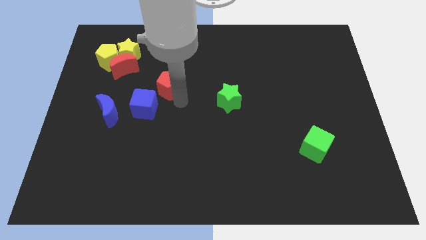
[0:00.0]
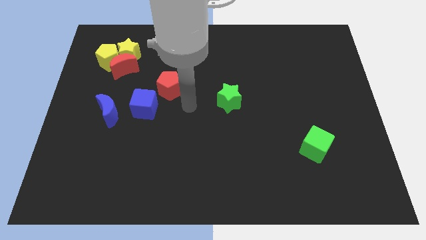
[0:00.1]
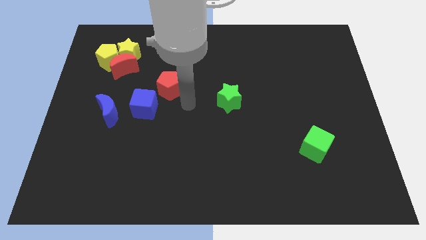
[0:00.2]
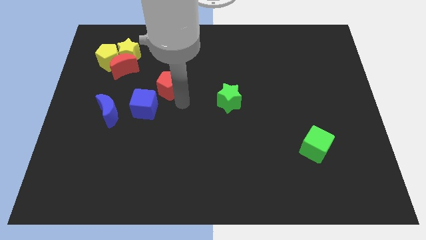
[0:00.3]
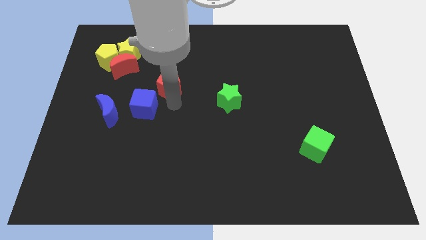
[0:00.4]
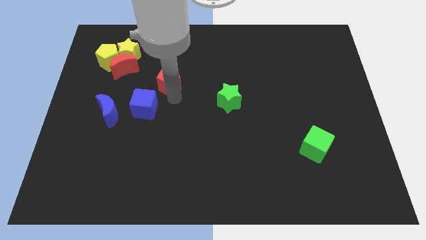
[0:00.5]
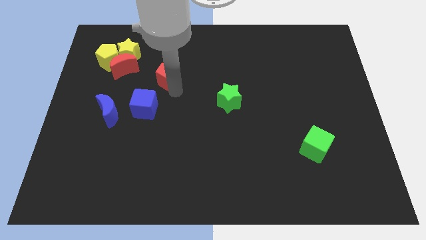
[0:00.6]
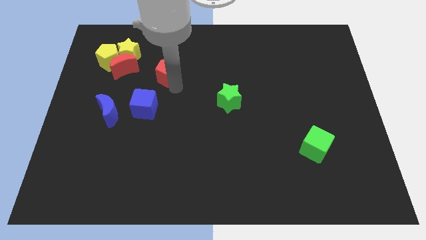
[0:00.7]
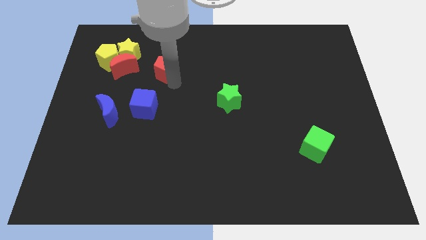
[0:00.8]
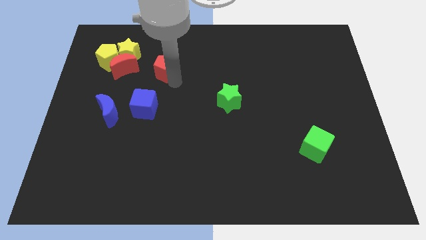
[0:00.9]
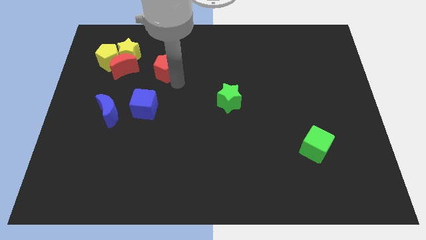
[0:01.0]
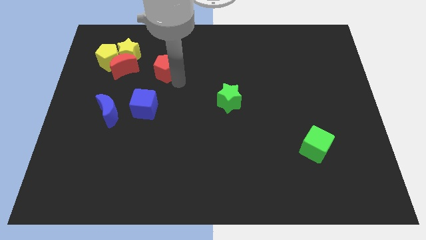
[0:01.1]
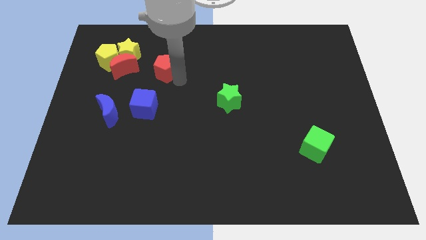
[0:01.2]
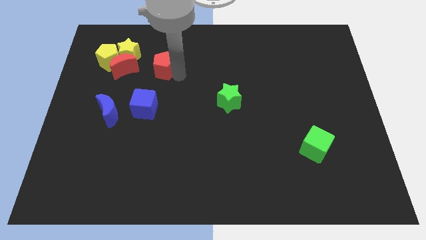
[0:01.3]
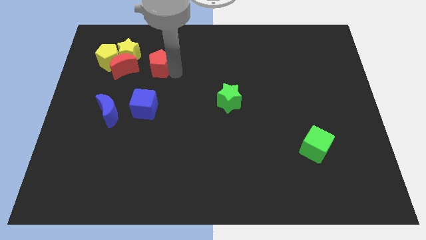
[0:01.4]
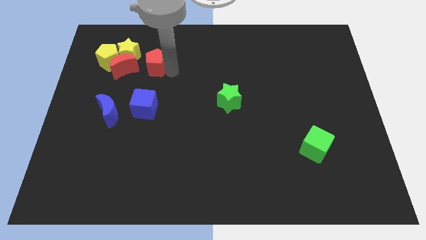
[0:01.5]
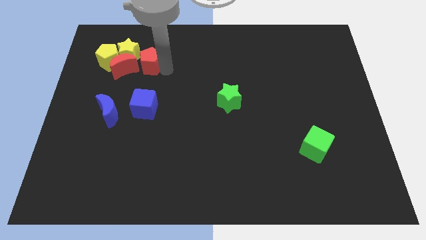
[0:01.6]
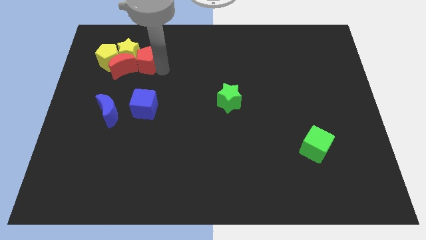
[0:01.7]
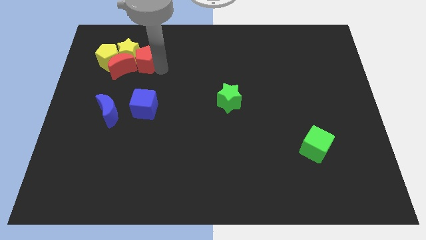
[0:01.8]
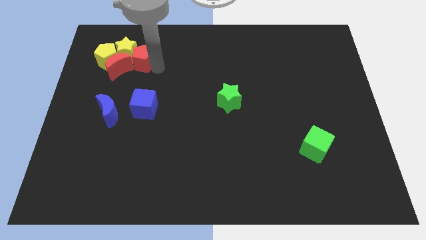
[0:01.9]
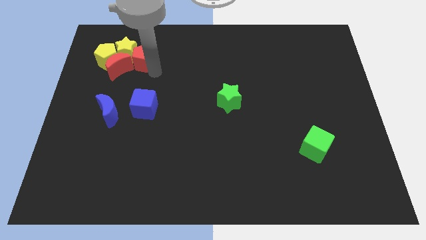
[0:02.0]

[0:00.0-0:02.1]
move the red pentagon into the group of blocks

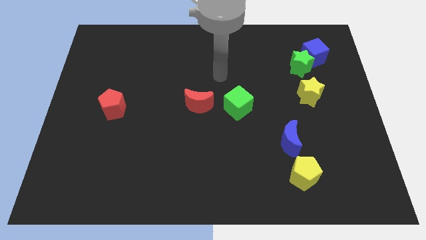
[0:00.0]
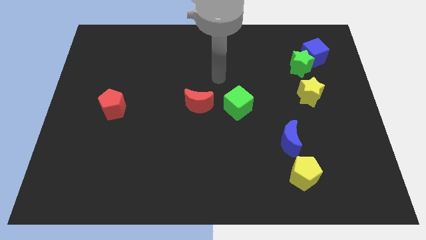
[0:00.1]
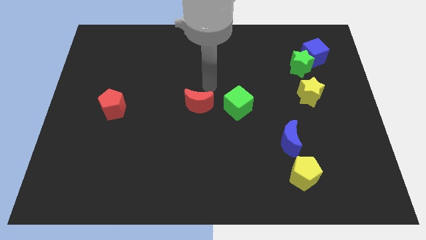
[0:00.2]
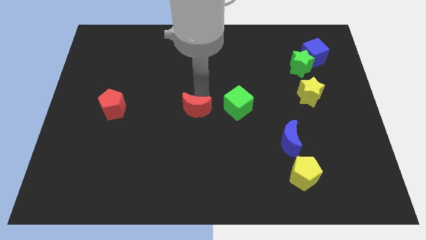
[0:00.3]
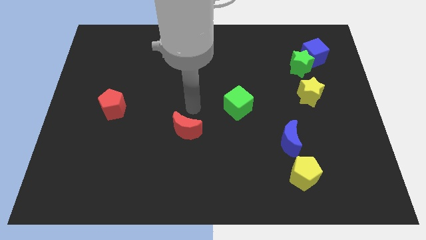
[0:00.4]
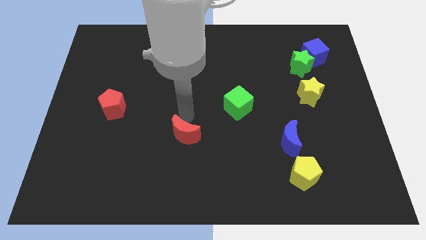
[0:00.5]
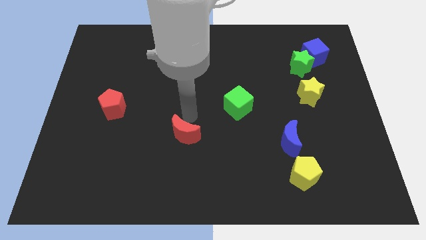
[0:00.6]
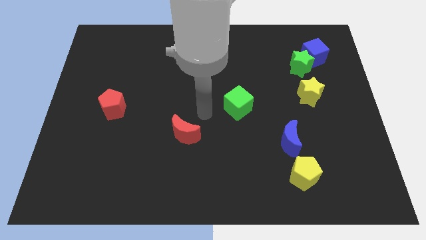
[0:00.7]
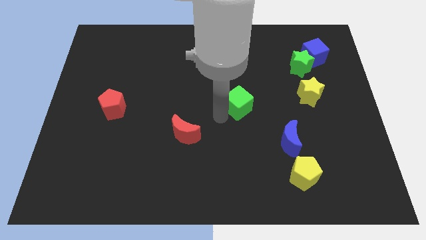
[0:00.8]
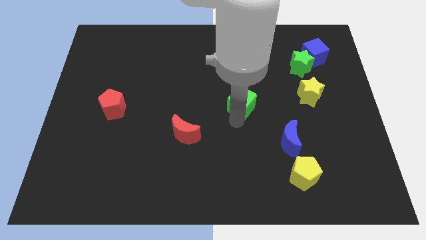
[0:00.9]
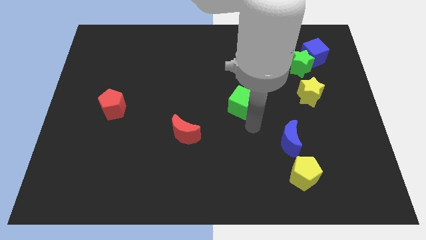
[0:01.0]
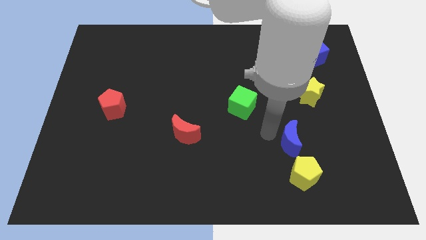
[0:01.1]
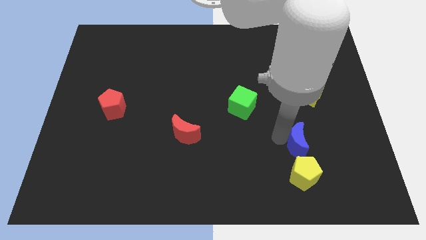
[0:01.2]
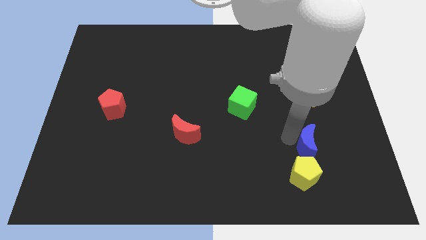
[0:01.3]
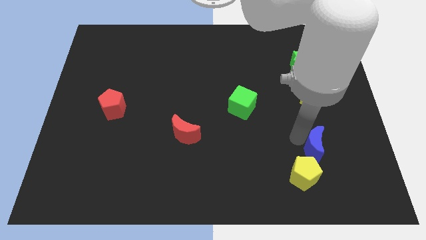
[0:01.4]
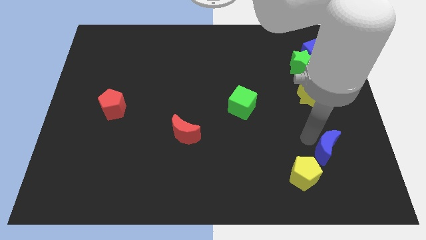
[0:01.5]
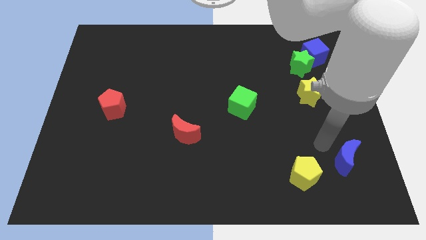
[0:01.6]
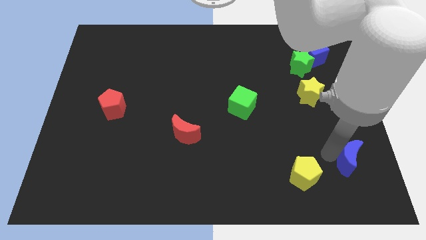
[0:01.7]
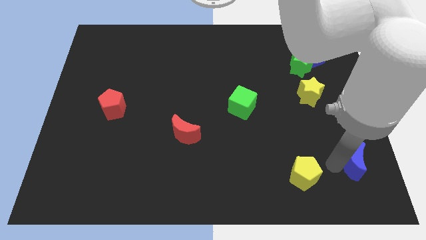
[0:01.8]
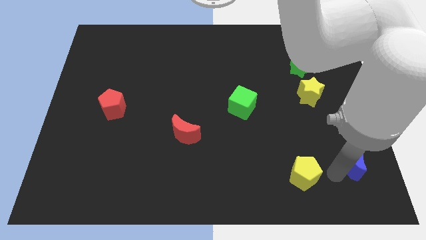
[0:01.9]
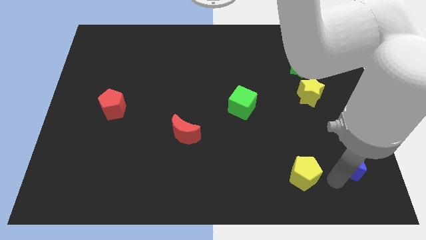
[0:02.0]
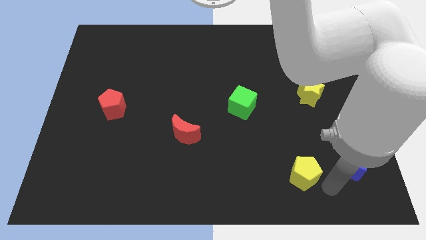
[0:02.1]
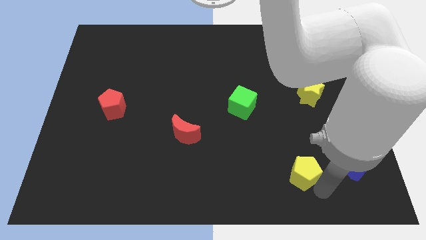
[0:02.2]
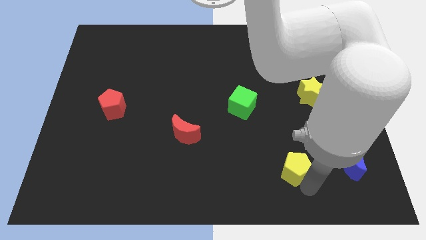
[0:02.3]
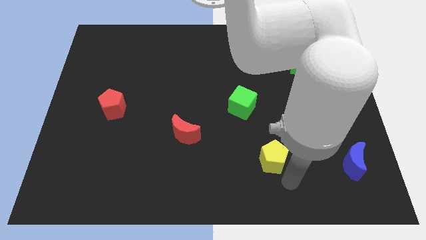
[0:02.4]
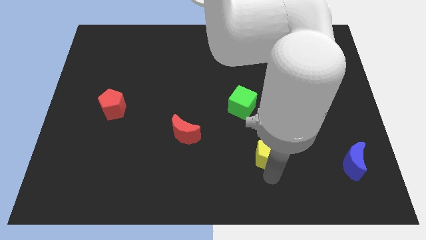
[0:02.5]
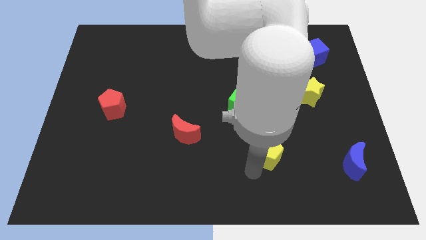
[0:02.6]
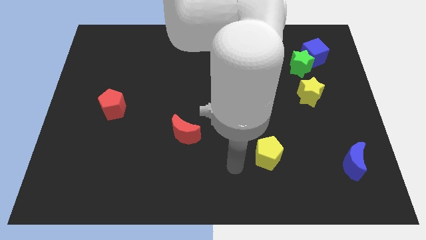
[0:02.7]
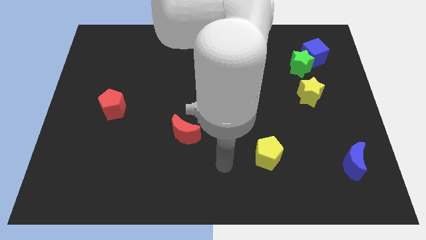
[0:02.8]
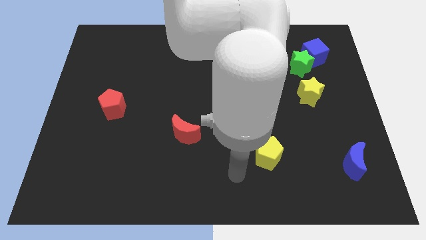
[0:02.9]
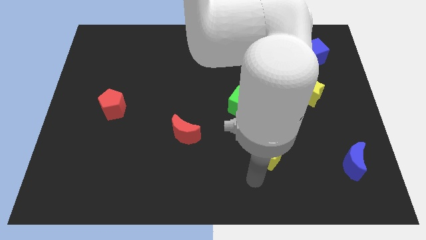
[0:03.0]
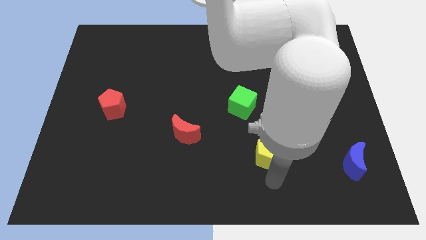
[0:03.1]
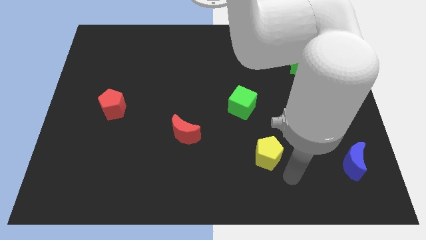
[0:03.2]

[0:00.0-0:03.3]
separate the blue crescent and yellow pentagon

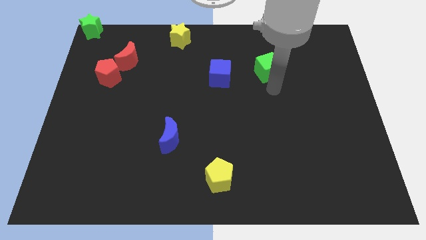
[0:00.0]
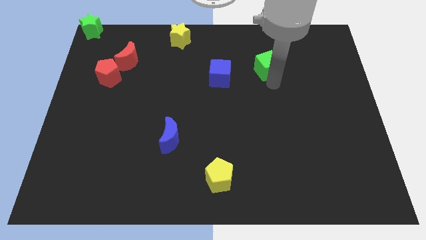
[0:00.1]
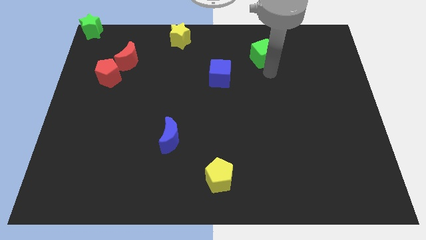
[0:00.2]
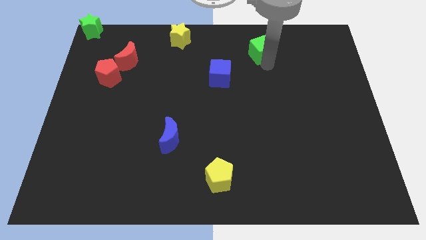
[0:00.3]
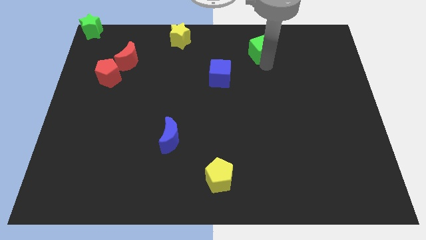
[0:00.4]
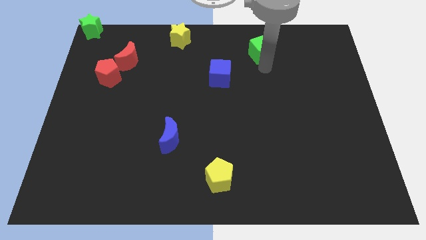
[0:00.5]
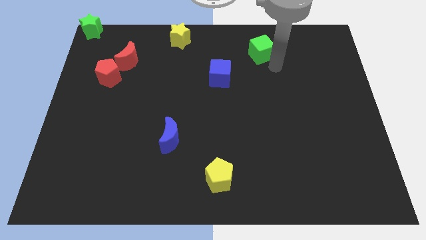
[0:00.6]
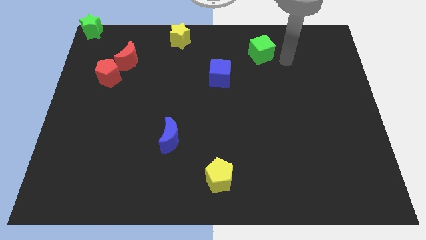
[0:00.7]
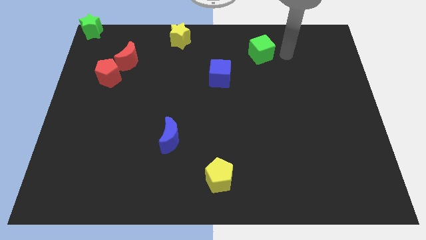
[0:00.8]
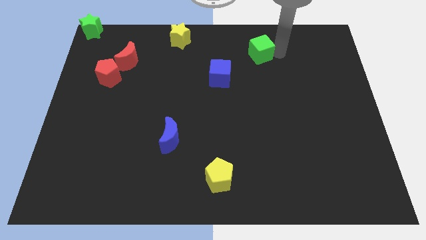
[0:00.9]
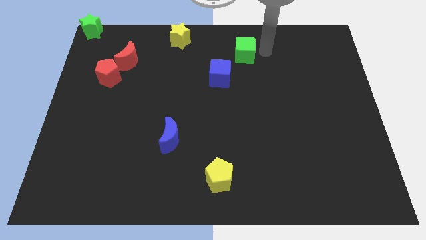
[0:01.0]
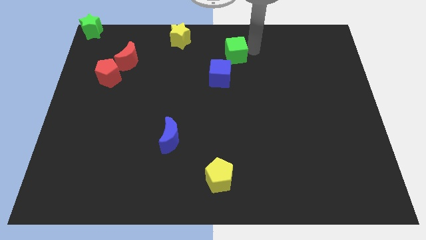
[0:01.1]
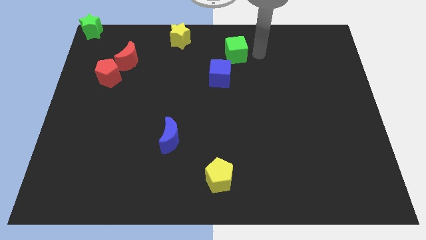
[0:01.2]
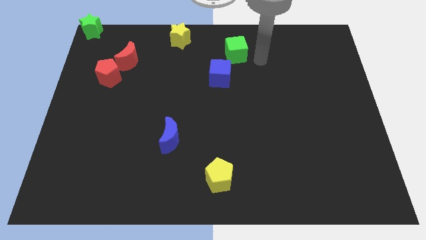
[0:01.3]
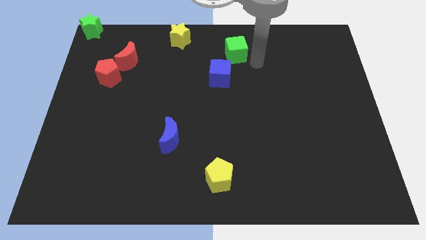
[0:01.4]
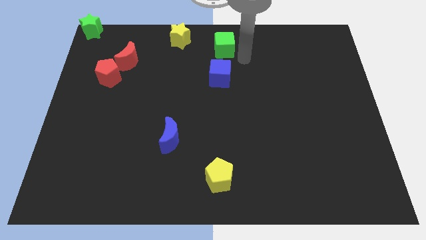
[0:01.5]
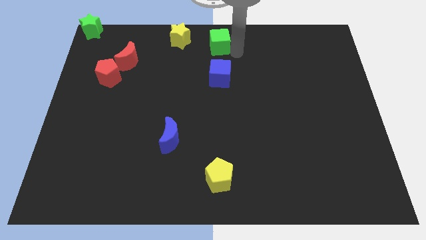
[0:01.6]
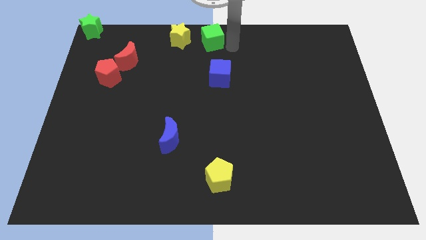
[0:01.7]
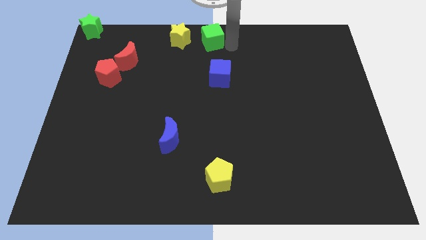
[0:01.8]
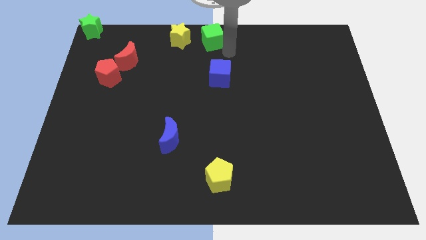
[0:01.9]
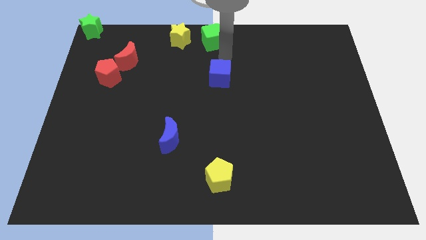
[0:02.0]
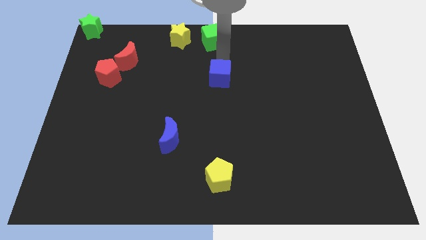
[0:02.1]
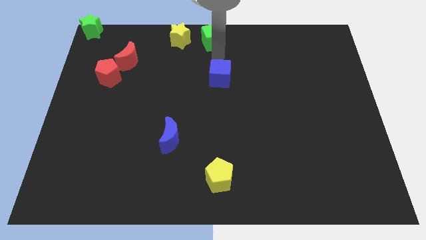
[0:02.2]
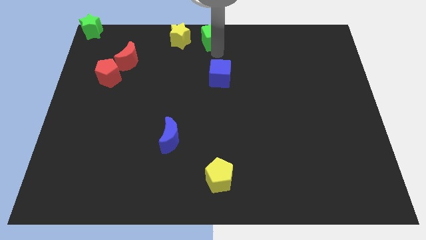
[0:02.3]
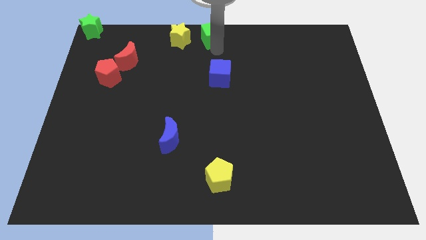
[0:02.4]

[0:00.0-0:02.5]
move the green cube to the top center

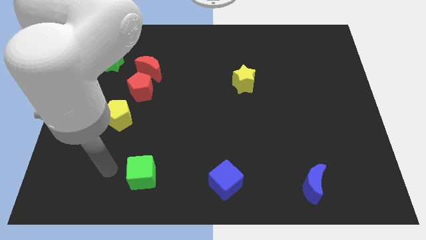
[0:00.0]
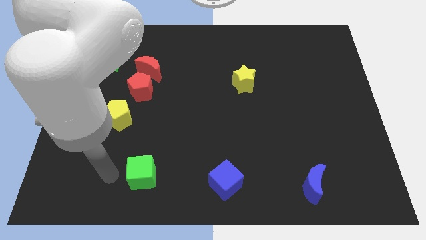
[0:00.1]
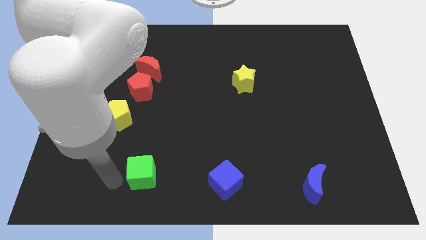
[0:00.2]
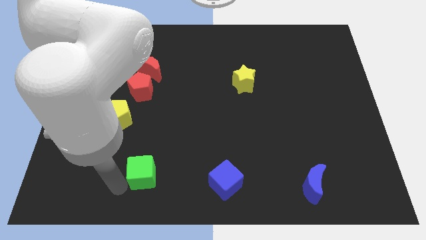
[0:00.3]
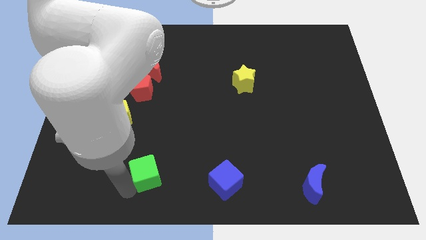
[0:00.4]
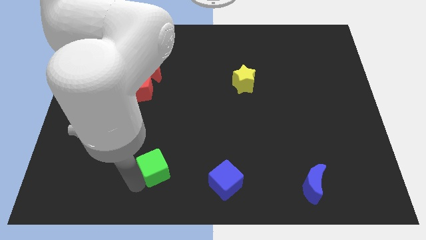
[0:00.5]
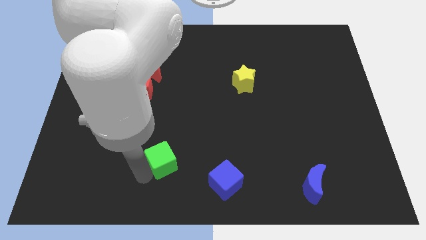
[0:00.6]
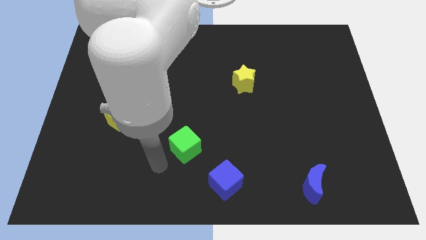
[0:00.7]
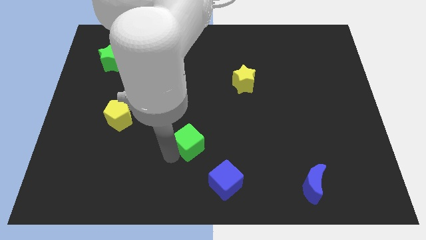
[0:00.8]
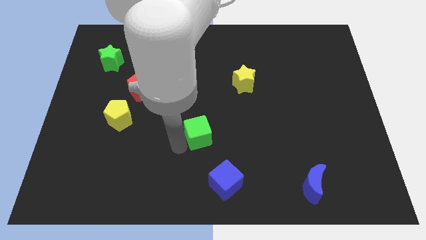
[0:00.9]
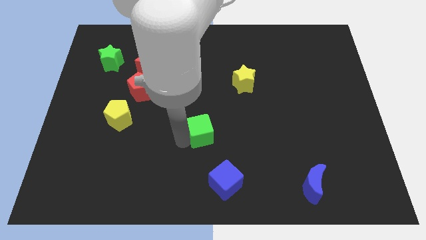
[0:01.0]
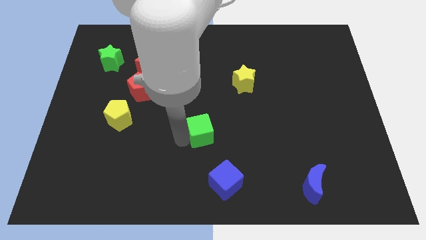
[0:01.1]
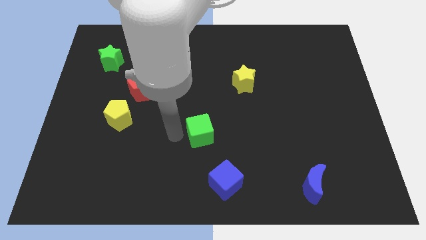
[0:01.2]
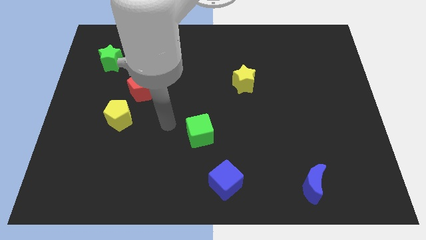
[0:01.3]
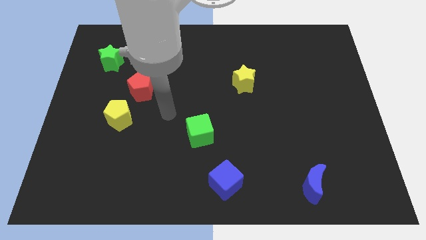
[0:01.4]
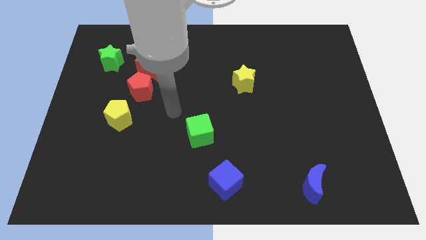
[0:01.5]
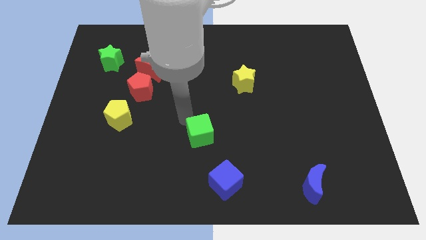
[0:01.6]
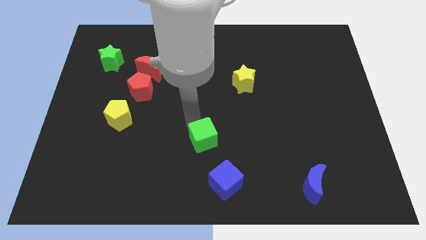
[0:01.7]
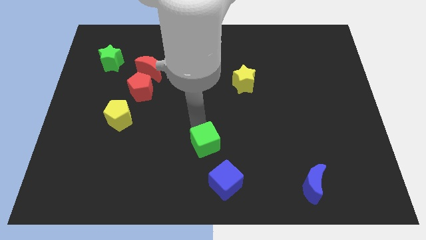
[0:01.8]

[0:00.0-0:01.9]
move the green cube to the blue cube
